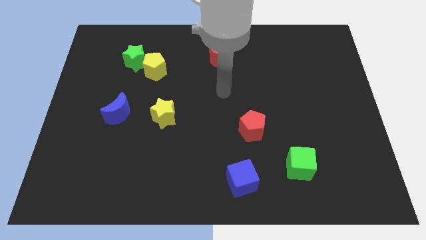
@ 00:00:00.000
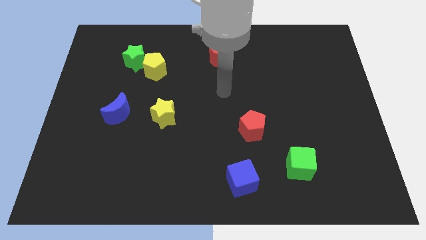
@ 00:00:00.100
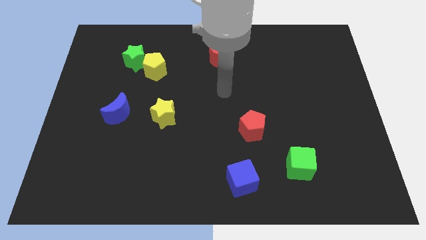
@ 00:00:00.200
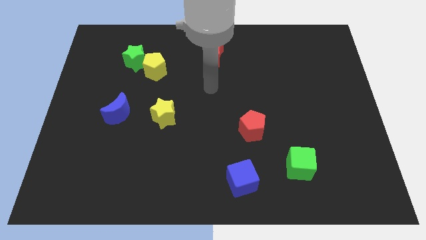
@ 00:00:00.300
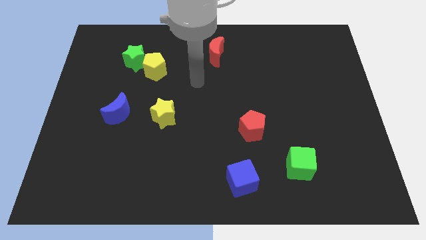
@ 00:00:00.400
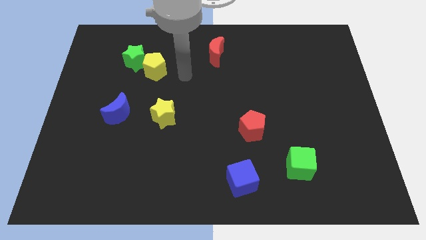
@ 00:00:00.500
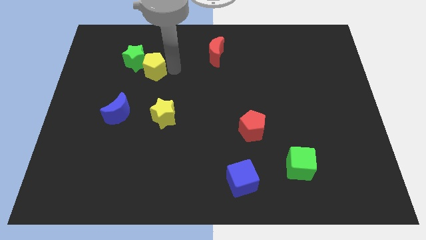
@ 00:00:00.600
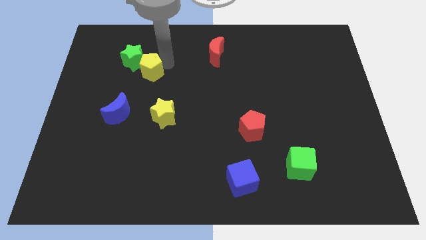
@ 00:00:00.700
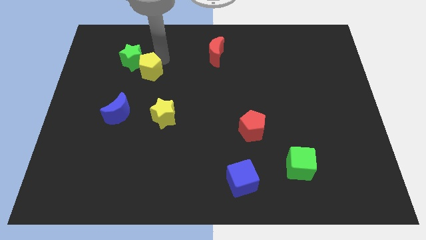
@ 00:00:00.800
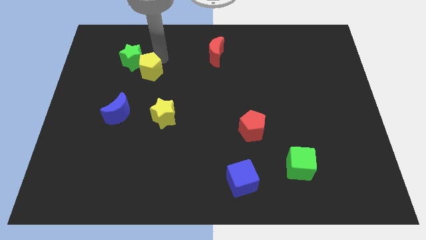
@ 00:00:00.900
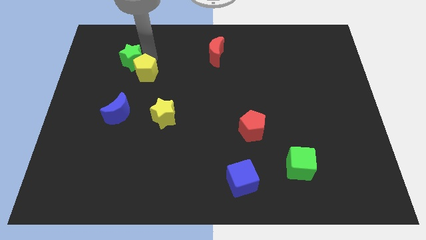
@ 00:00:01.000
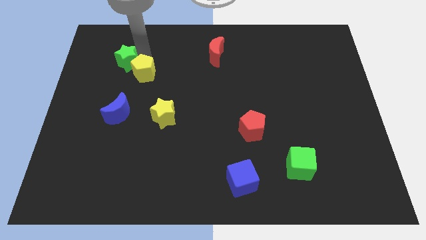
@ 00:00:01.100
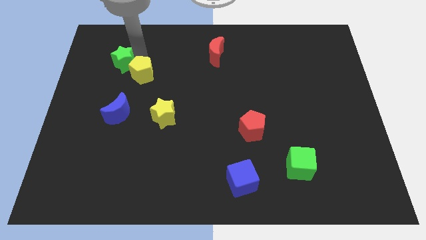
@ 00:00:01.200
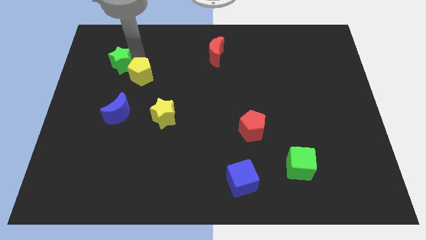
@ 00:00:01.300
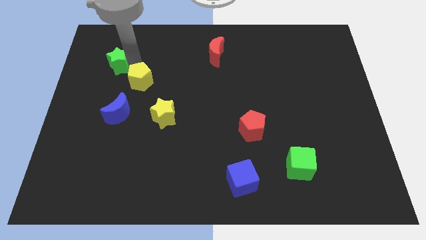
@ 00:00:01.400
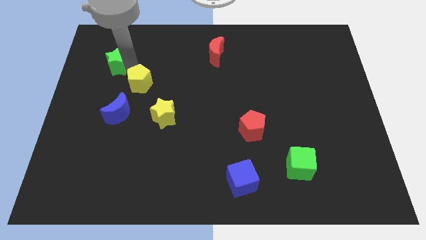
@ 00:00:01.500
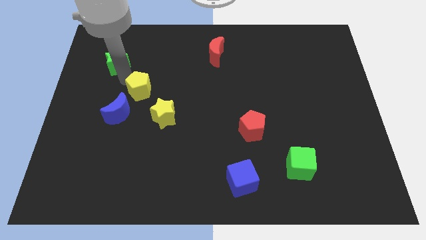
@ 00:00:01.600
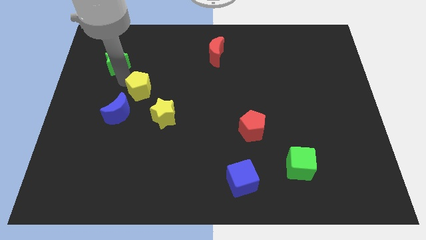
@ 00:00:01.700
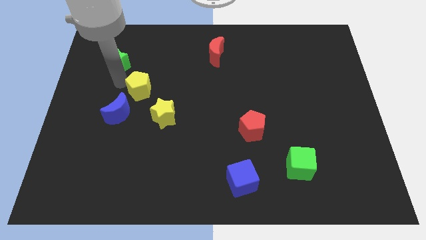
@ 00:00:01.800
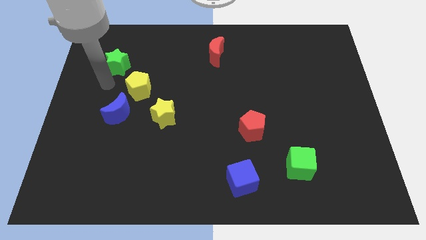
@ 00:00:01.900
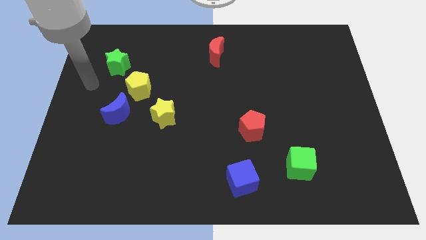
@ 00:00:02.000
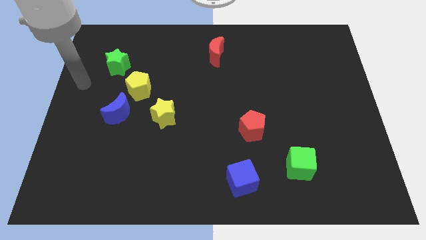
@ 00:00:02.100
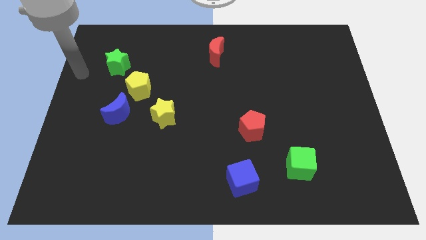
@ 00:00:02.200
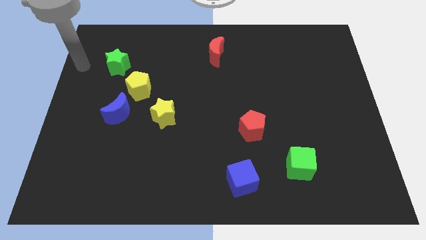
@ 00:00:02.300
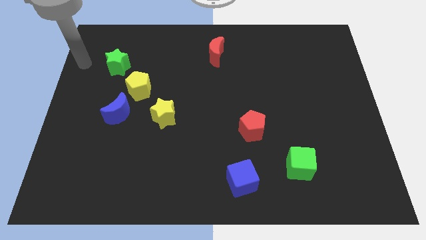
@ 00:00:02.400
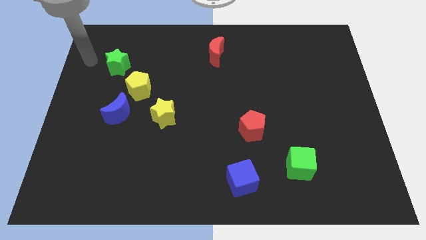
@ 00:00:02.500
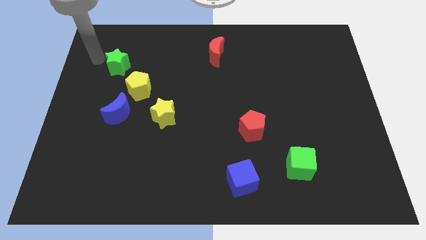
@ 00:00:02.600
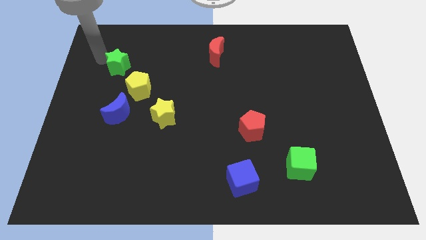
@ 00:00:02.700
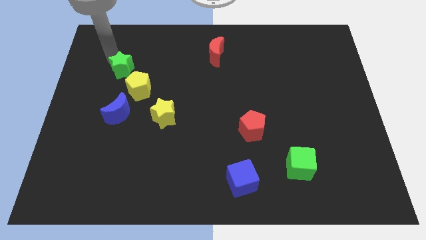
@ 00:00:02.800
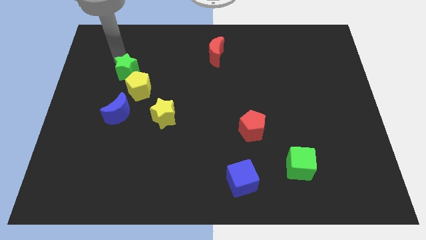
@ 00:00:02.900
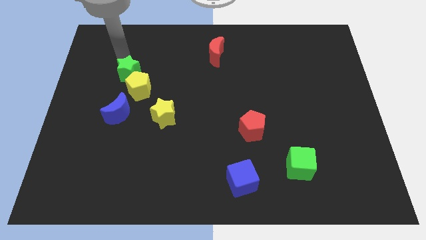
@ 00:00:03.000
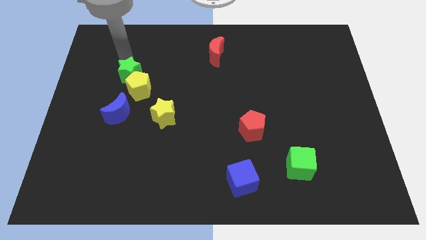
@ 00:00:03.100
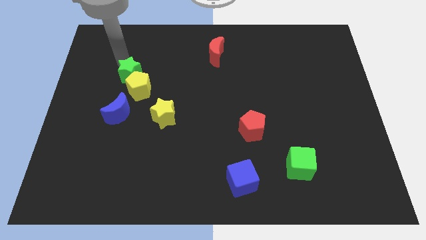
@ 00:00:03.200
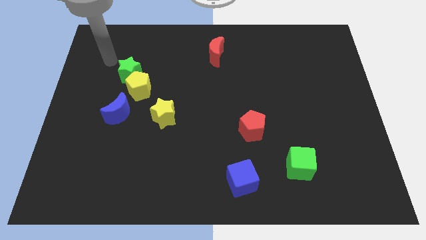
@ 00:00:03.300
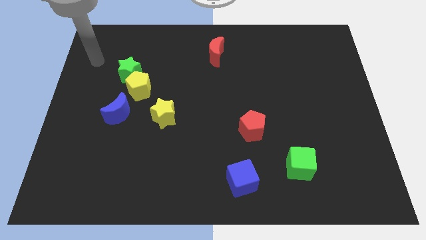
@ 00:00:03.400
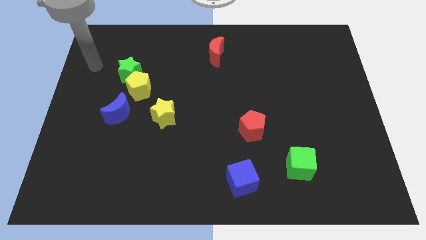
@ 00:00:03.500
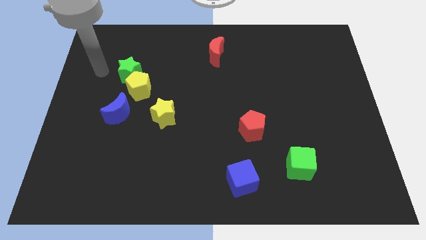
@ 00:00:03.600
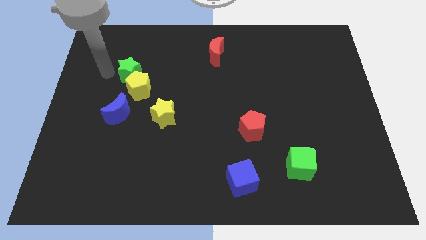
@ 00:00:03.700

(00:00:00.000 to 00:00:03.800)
push the red pentagon and green star diagonally on the top left side of the yellow star

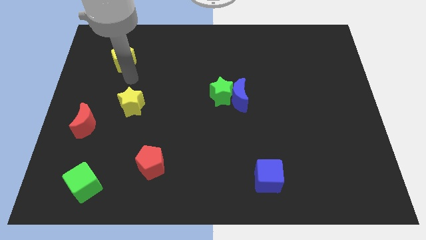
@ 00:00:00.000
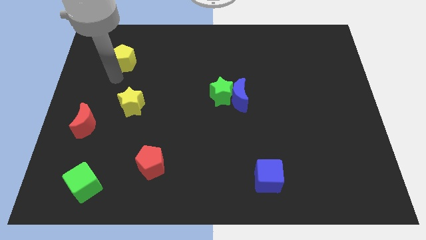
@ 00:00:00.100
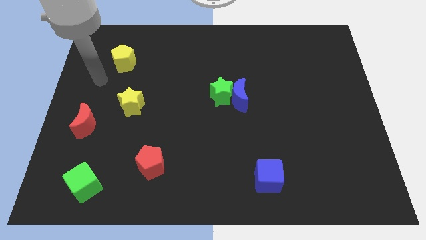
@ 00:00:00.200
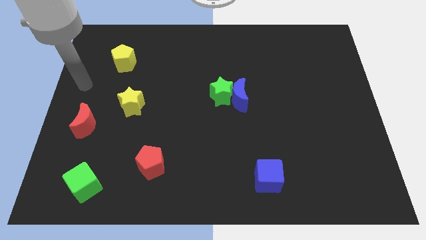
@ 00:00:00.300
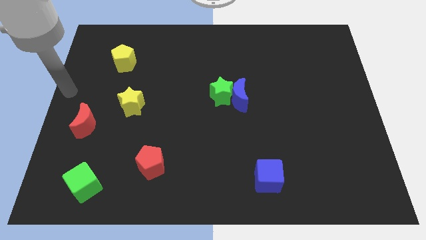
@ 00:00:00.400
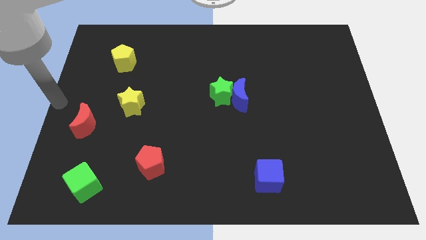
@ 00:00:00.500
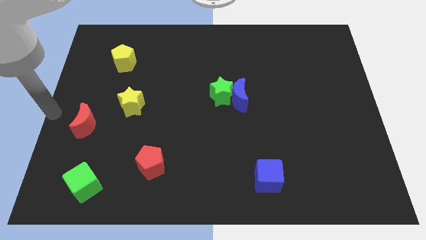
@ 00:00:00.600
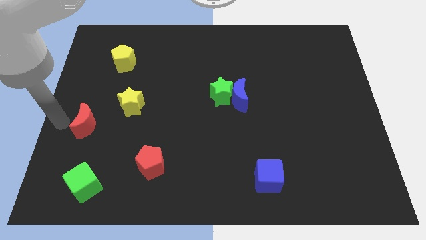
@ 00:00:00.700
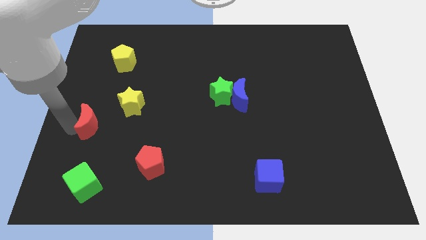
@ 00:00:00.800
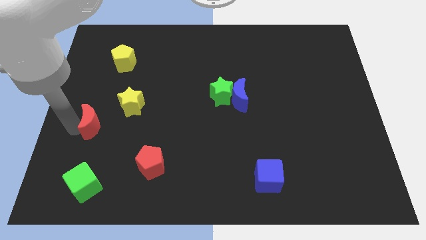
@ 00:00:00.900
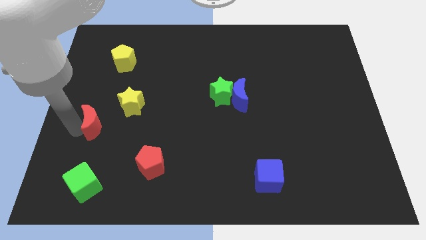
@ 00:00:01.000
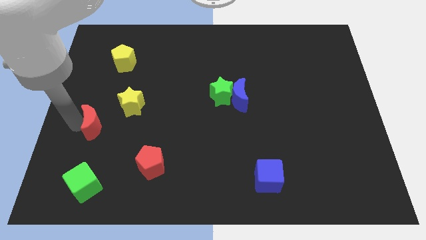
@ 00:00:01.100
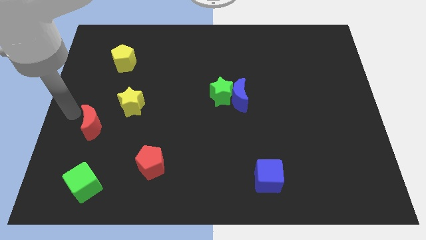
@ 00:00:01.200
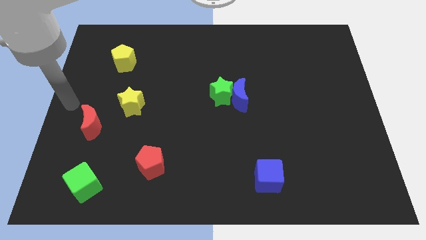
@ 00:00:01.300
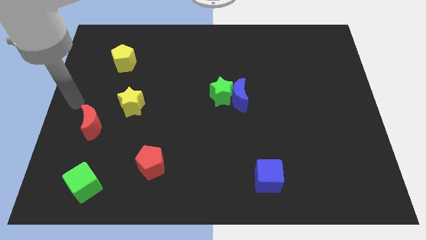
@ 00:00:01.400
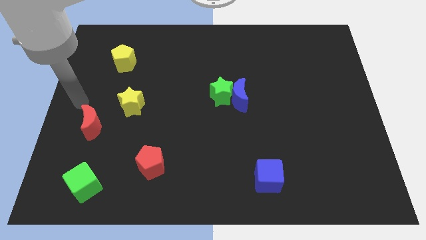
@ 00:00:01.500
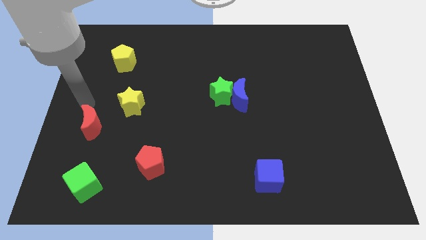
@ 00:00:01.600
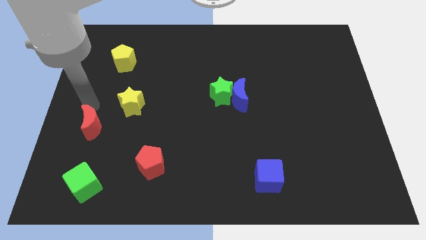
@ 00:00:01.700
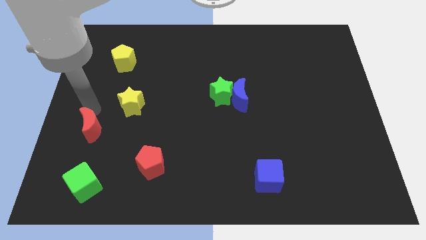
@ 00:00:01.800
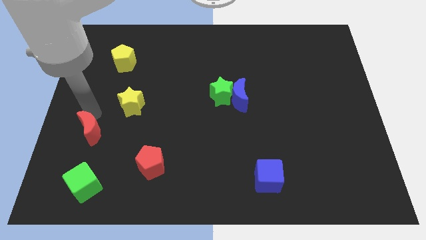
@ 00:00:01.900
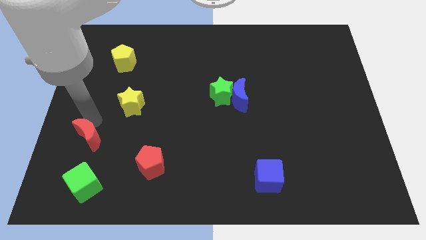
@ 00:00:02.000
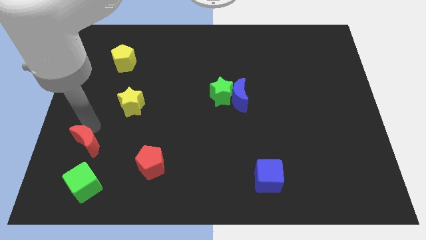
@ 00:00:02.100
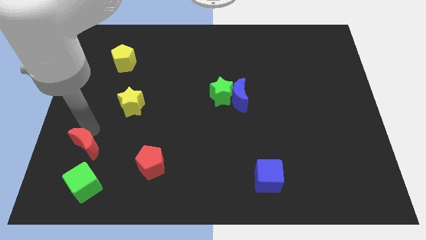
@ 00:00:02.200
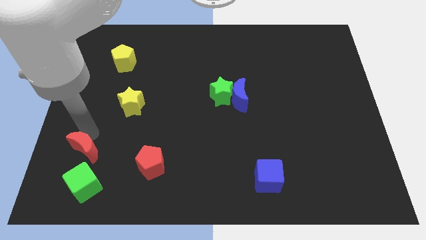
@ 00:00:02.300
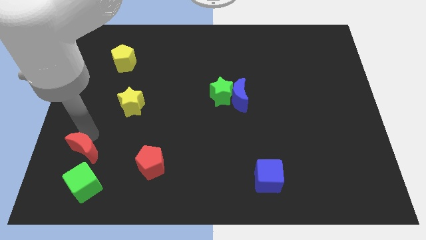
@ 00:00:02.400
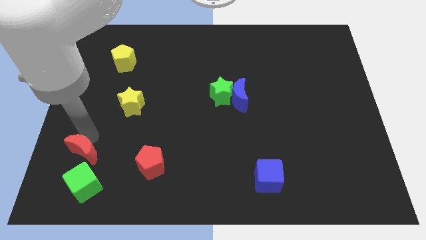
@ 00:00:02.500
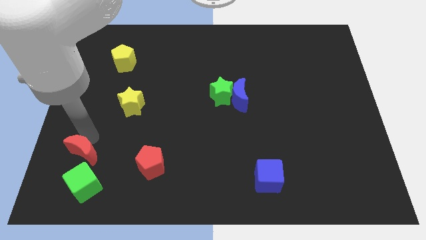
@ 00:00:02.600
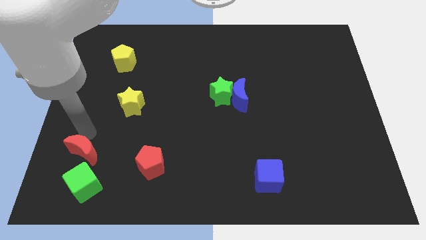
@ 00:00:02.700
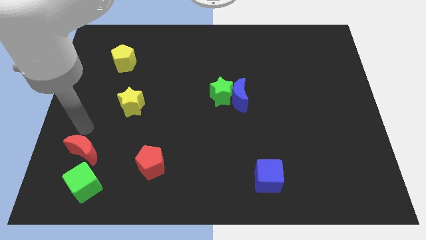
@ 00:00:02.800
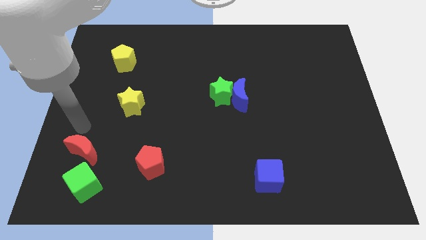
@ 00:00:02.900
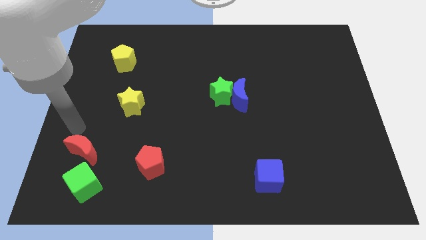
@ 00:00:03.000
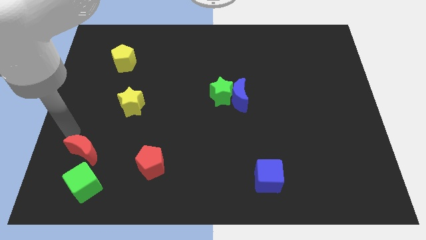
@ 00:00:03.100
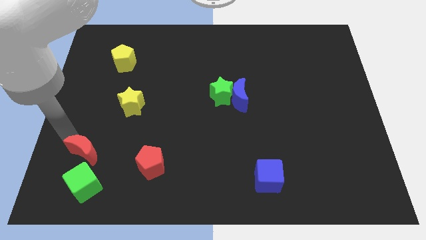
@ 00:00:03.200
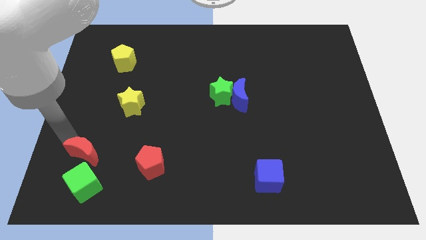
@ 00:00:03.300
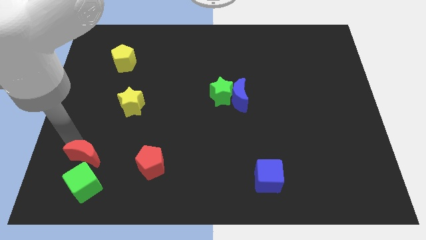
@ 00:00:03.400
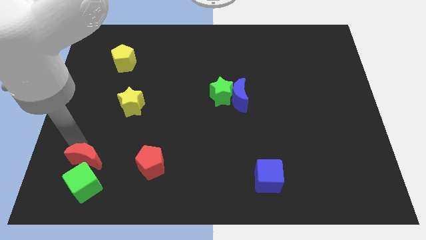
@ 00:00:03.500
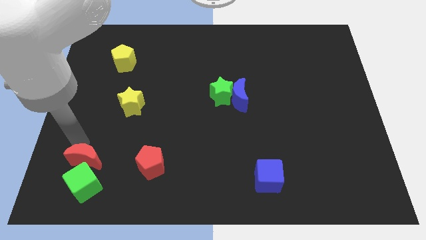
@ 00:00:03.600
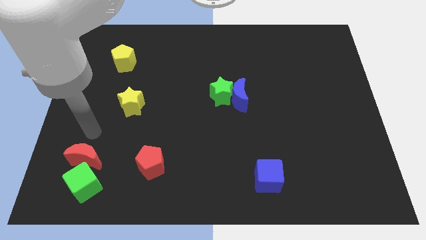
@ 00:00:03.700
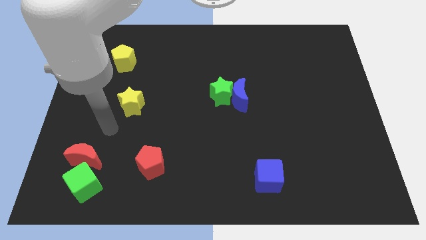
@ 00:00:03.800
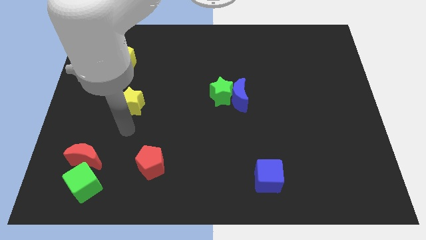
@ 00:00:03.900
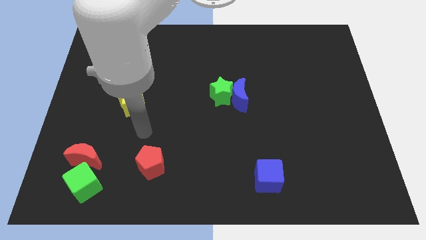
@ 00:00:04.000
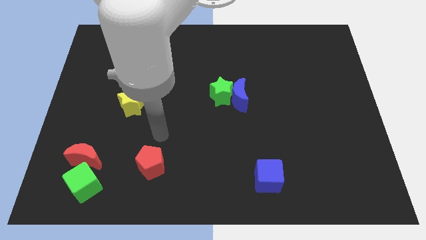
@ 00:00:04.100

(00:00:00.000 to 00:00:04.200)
place the red moon left to the red pentagon

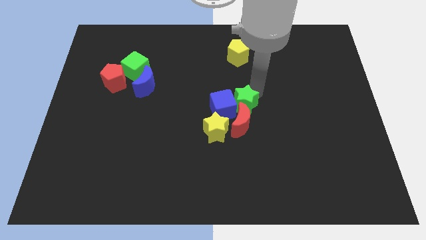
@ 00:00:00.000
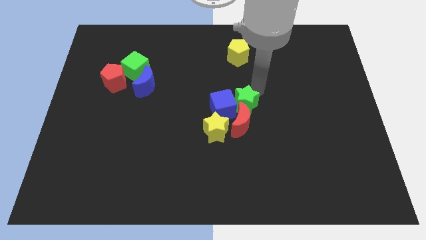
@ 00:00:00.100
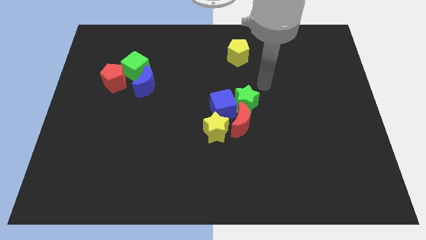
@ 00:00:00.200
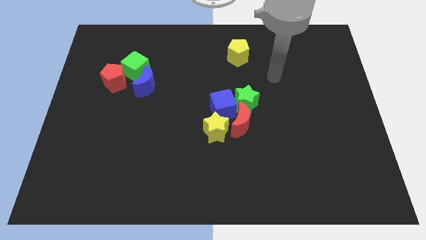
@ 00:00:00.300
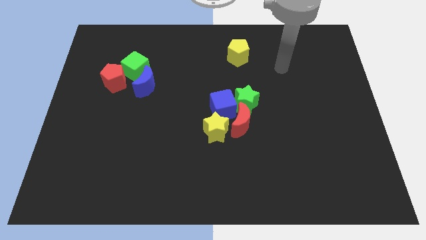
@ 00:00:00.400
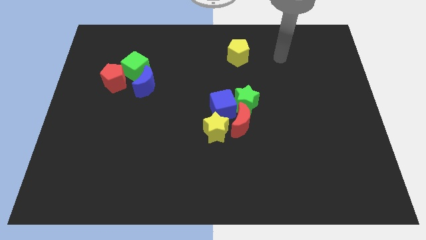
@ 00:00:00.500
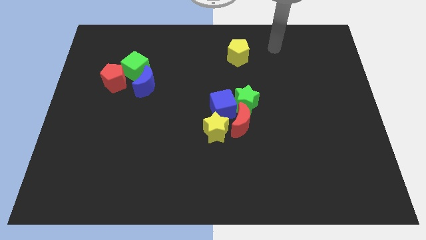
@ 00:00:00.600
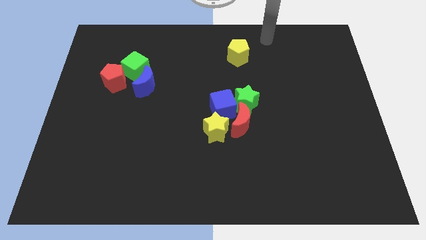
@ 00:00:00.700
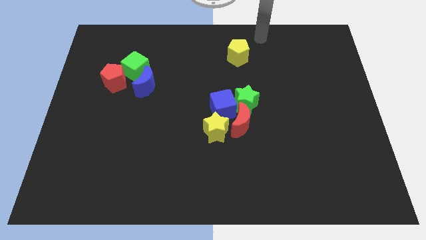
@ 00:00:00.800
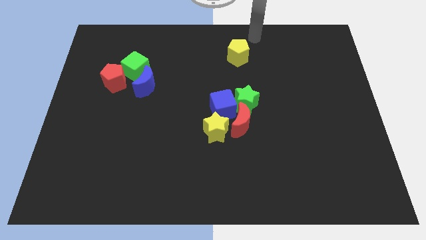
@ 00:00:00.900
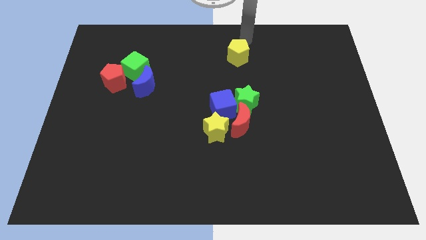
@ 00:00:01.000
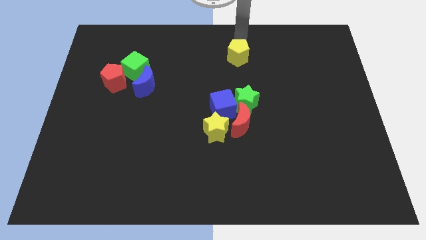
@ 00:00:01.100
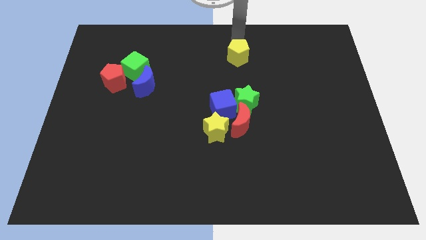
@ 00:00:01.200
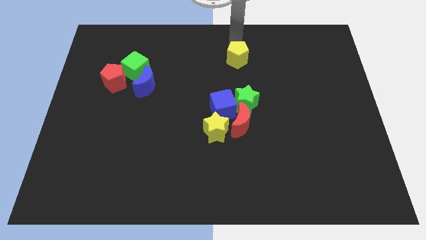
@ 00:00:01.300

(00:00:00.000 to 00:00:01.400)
move your arm away from the green star
